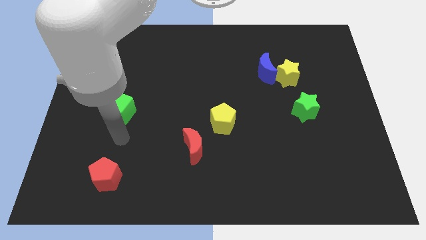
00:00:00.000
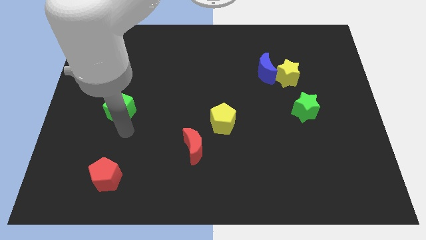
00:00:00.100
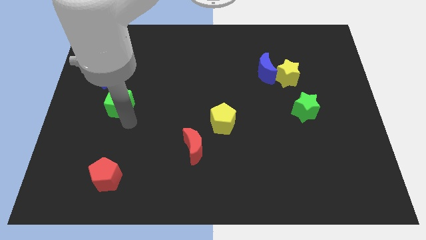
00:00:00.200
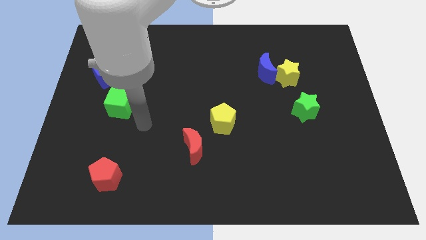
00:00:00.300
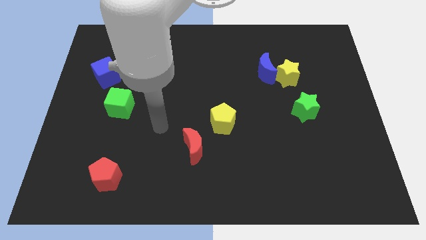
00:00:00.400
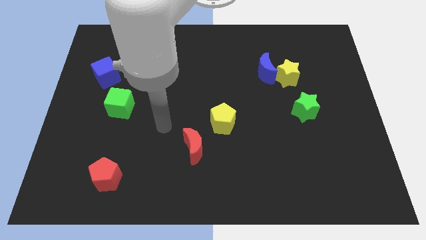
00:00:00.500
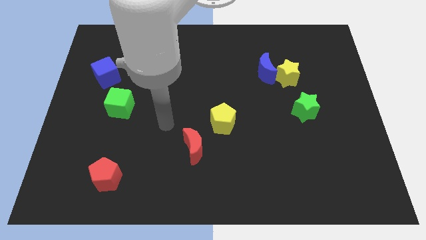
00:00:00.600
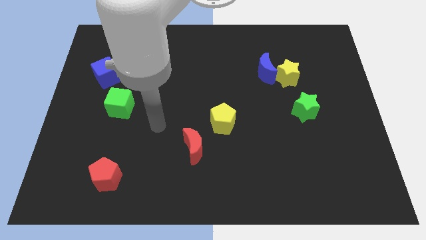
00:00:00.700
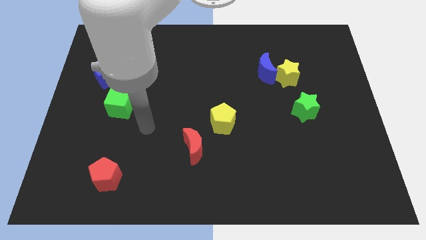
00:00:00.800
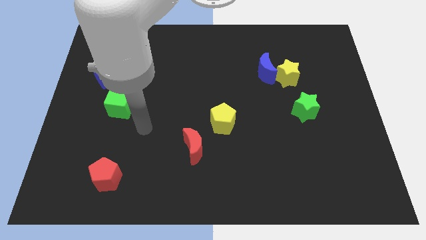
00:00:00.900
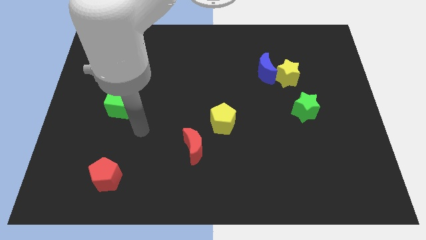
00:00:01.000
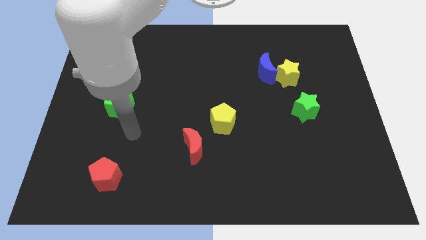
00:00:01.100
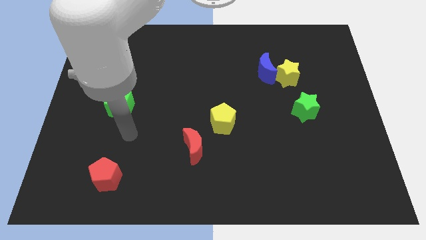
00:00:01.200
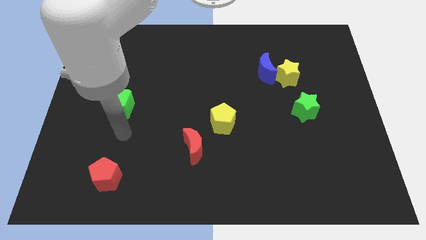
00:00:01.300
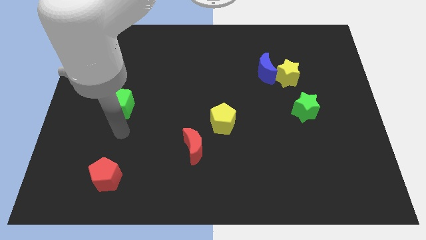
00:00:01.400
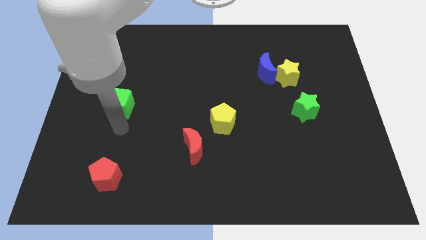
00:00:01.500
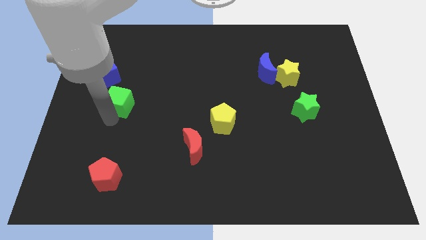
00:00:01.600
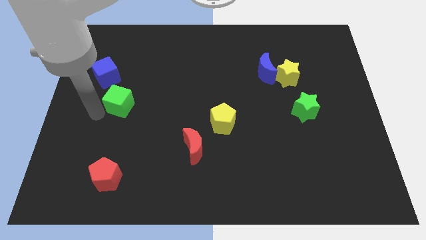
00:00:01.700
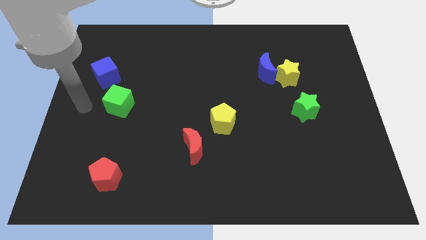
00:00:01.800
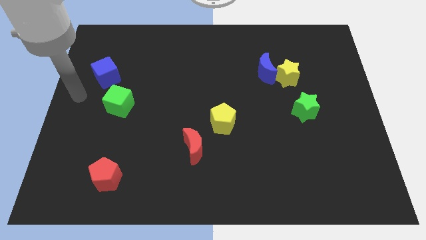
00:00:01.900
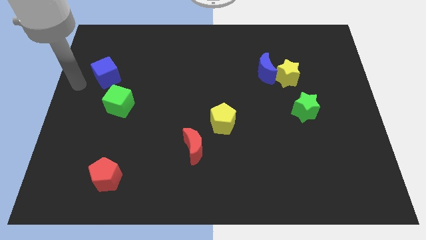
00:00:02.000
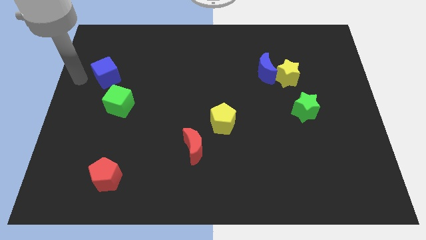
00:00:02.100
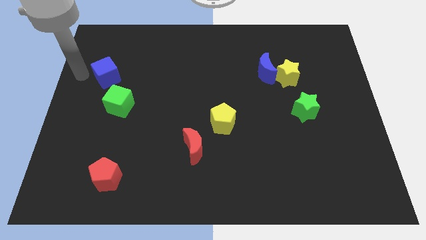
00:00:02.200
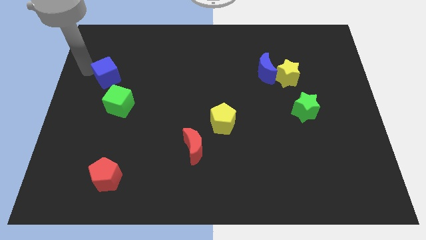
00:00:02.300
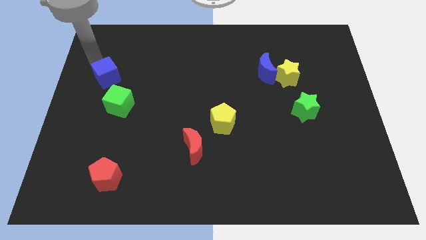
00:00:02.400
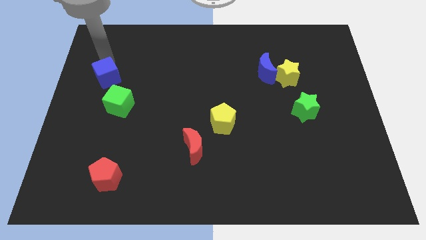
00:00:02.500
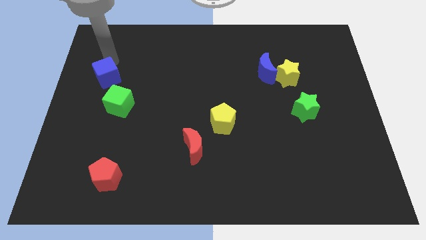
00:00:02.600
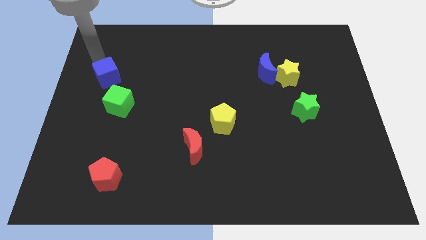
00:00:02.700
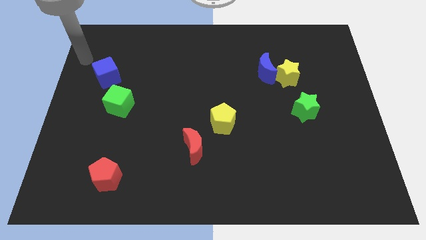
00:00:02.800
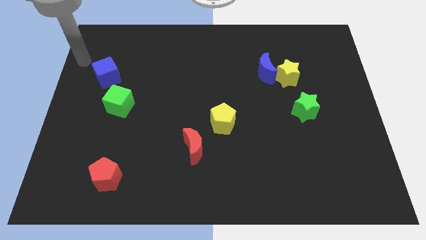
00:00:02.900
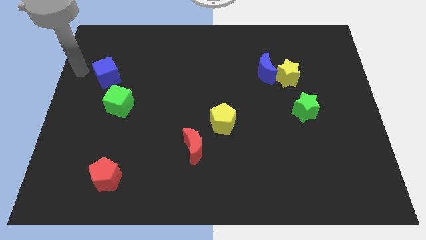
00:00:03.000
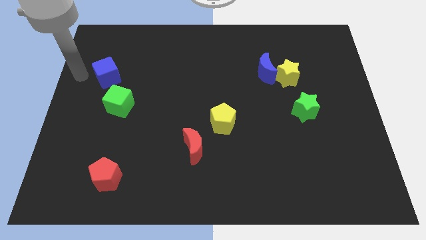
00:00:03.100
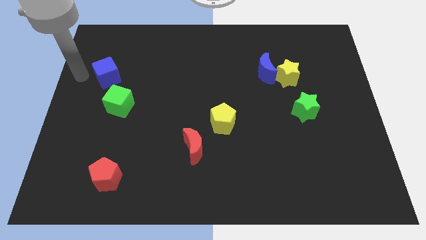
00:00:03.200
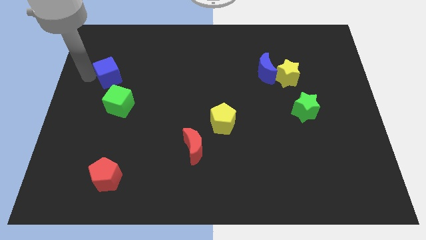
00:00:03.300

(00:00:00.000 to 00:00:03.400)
move the green cube slightly upwards

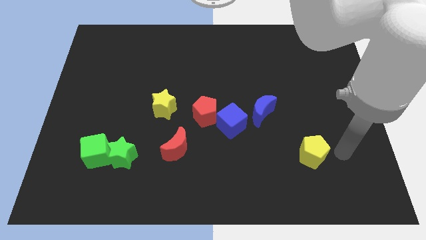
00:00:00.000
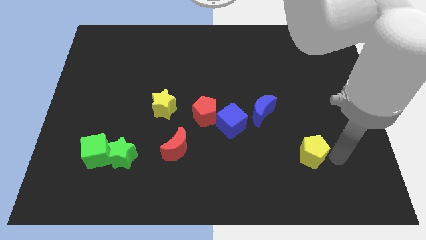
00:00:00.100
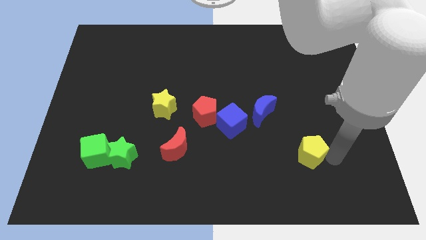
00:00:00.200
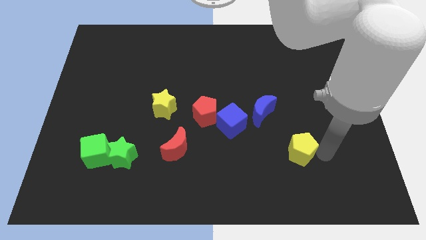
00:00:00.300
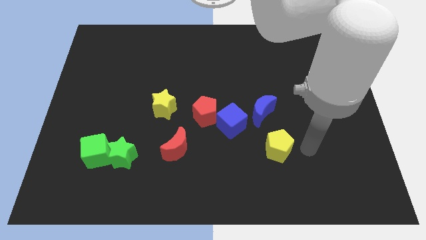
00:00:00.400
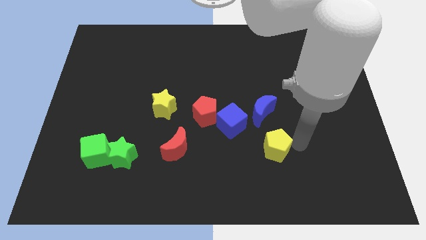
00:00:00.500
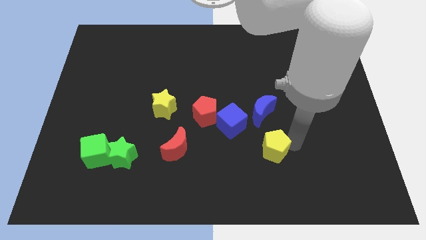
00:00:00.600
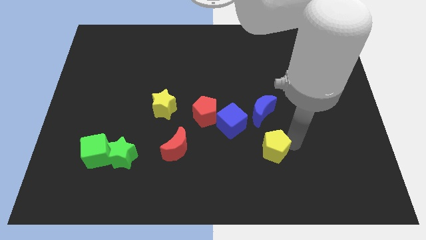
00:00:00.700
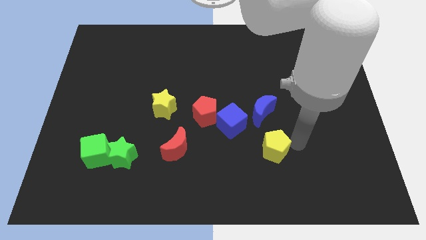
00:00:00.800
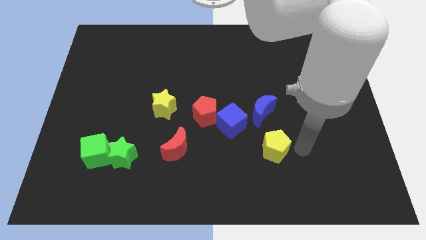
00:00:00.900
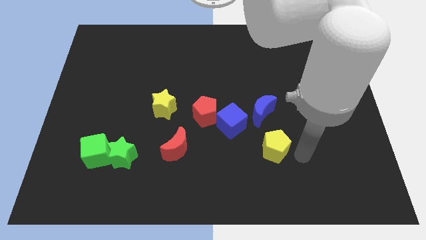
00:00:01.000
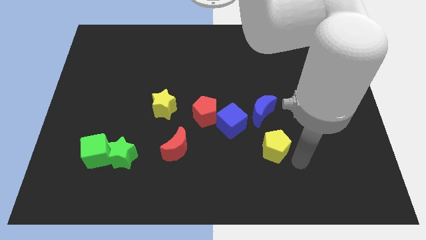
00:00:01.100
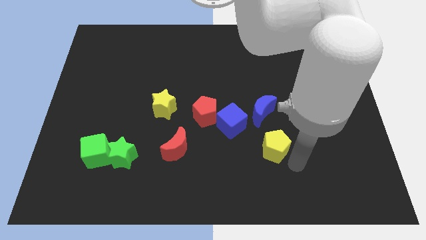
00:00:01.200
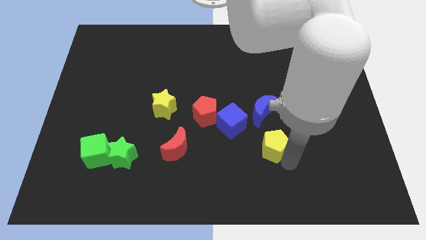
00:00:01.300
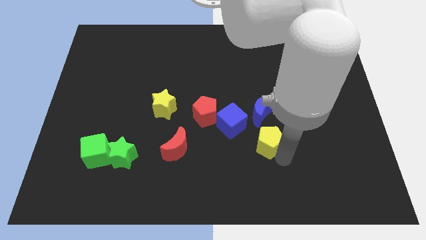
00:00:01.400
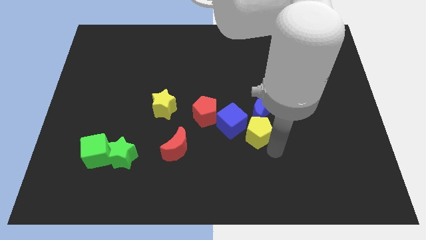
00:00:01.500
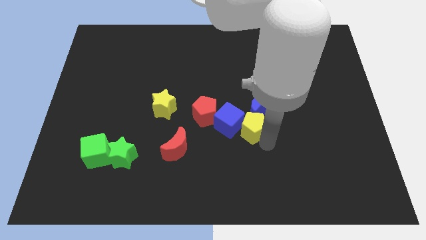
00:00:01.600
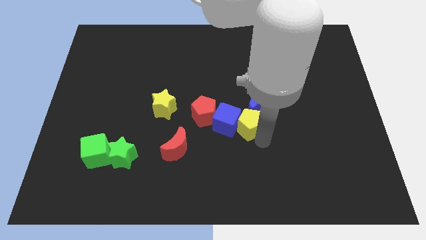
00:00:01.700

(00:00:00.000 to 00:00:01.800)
move the yellow pentagon into the right of the blue cube

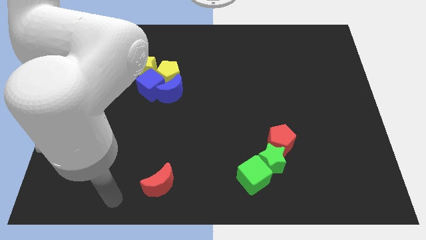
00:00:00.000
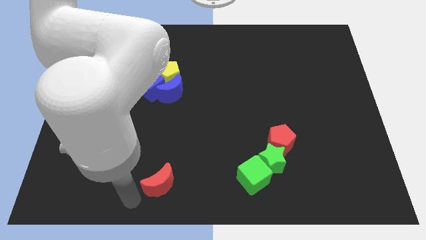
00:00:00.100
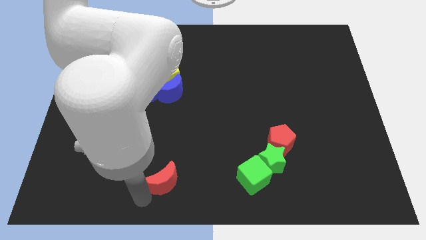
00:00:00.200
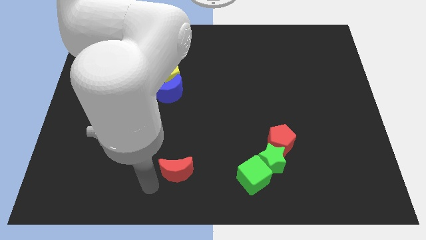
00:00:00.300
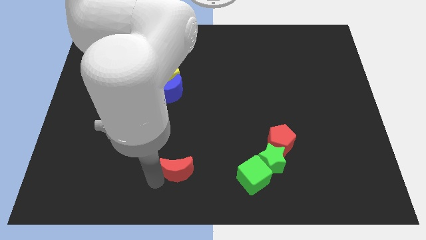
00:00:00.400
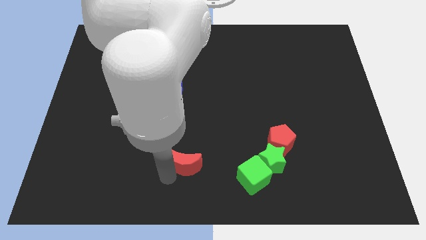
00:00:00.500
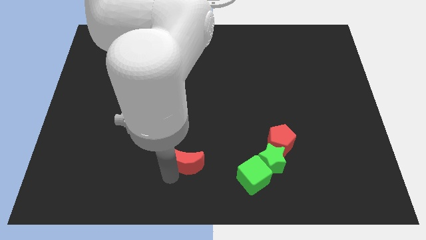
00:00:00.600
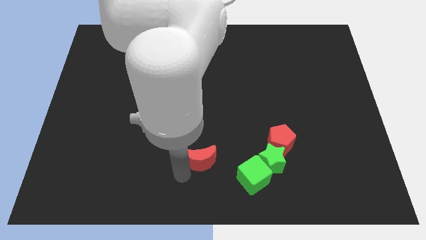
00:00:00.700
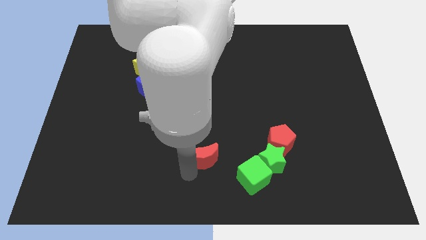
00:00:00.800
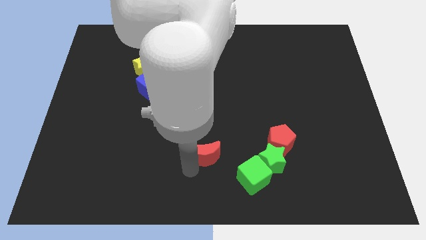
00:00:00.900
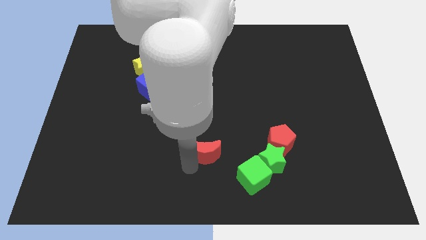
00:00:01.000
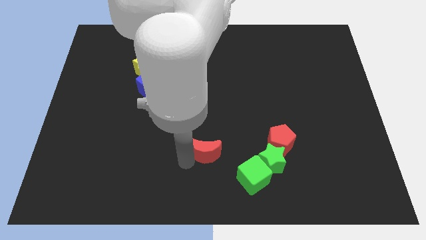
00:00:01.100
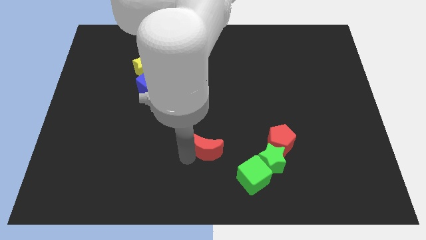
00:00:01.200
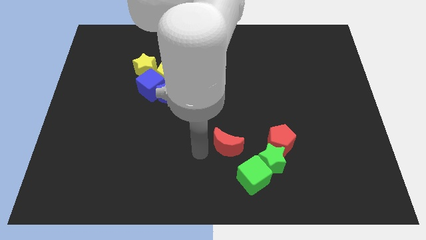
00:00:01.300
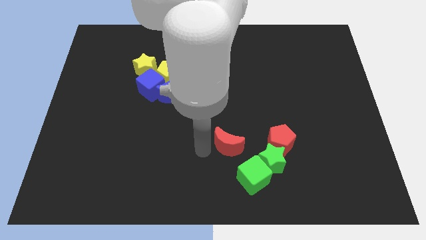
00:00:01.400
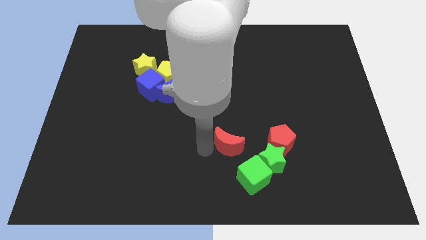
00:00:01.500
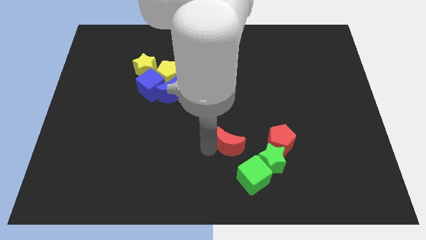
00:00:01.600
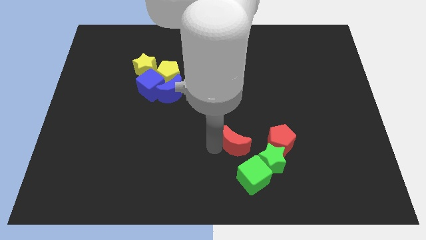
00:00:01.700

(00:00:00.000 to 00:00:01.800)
place the red crescent diagonally on top of green blocks

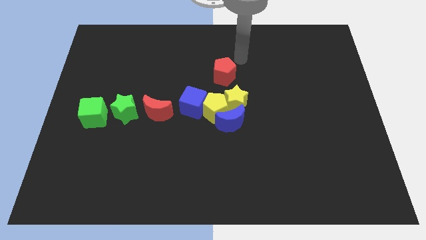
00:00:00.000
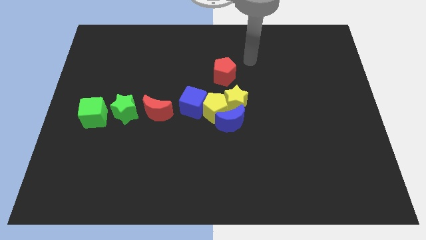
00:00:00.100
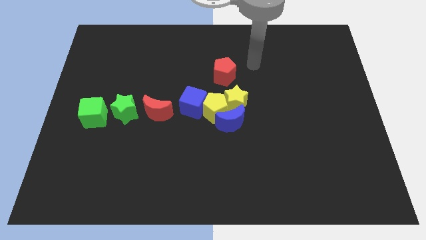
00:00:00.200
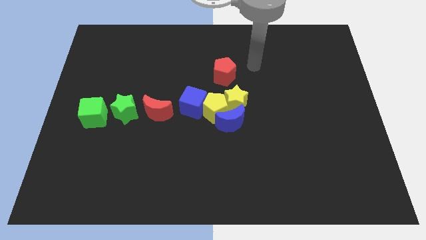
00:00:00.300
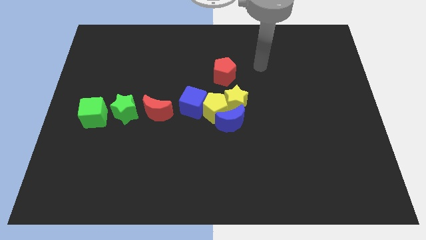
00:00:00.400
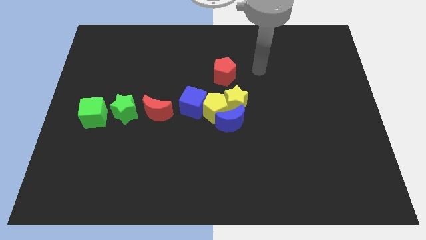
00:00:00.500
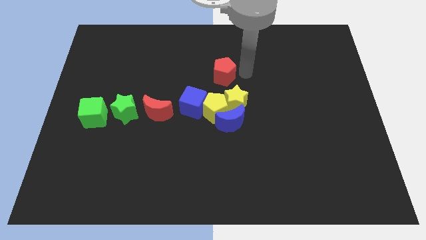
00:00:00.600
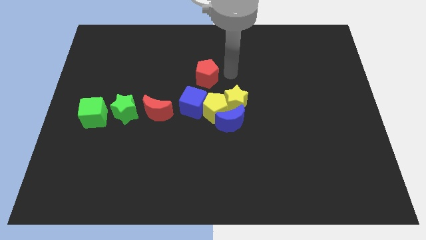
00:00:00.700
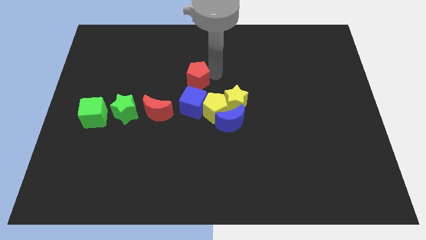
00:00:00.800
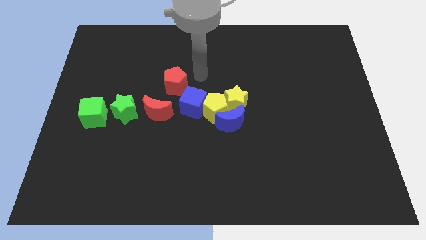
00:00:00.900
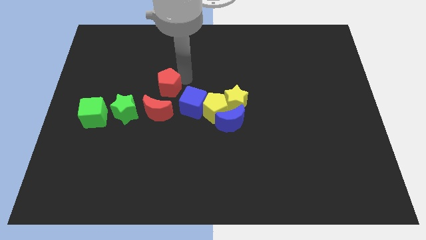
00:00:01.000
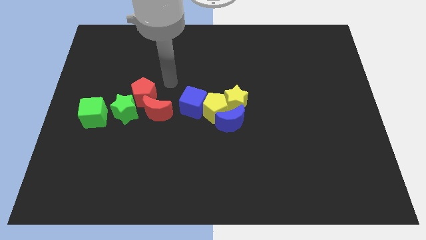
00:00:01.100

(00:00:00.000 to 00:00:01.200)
push the red pentagon above the red moon

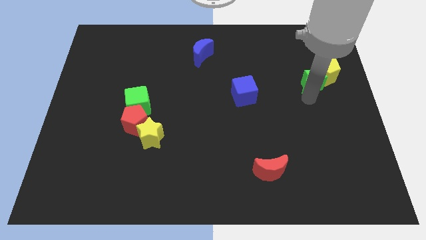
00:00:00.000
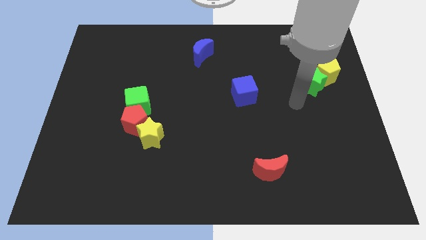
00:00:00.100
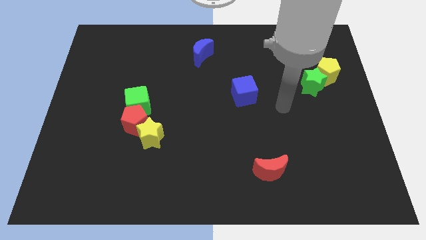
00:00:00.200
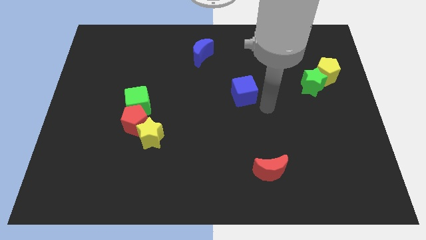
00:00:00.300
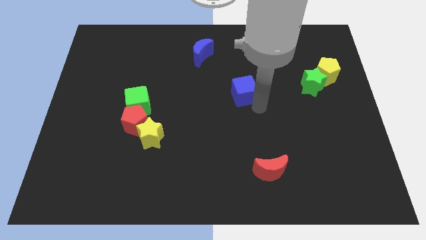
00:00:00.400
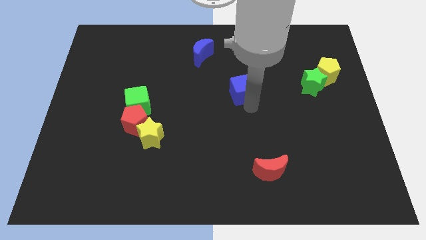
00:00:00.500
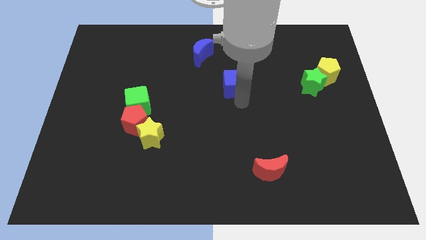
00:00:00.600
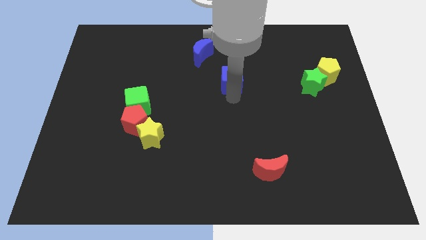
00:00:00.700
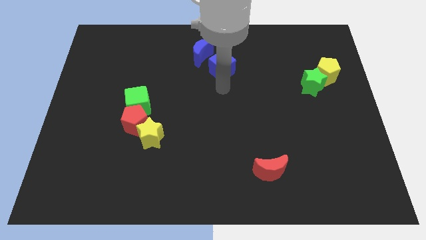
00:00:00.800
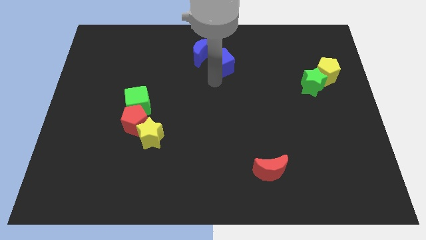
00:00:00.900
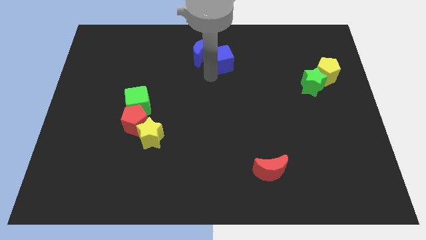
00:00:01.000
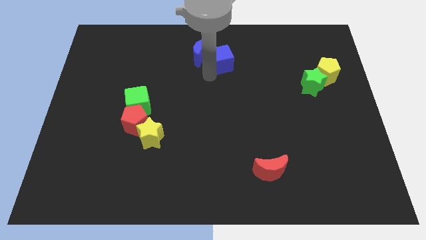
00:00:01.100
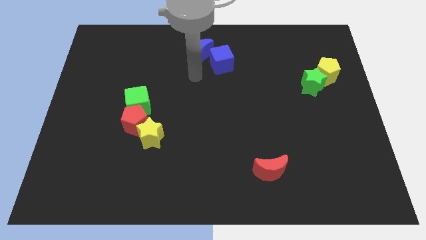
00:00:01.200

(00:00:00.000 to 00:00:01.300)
slide the blue cube towards the blue moon
